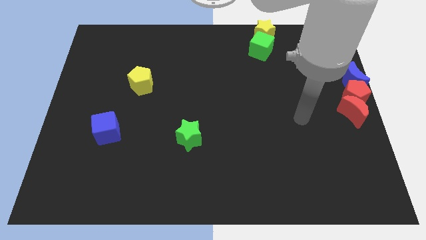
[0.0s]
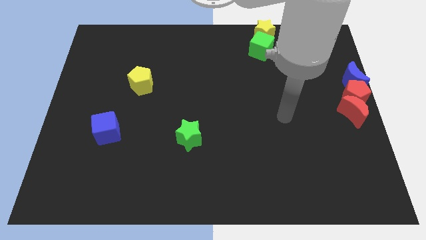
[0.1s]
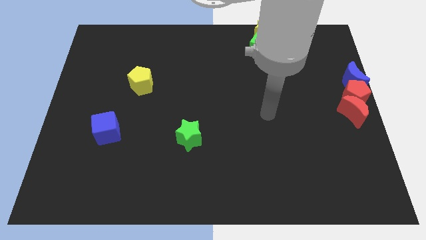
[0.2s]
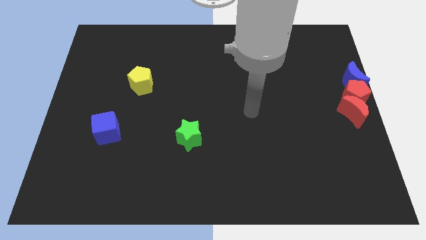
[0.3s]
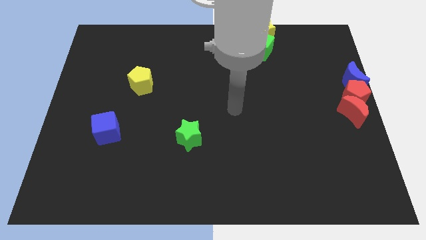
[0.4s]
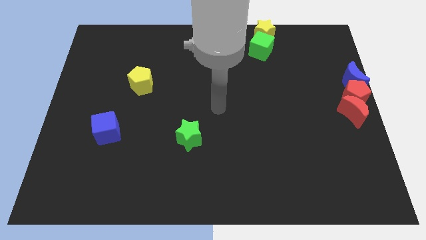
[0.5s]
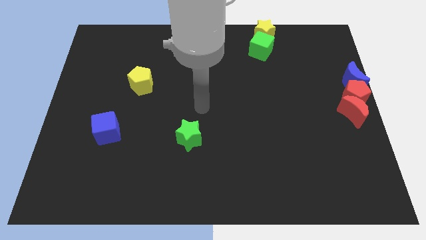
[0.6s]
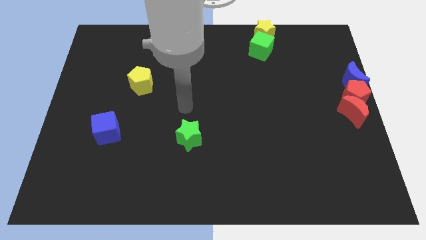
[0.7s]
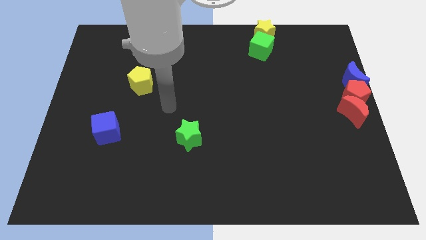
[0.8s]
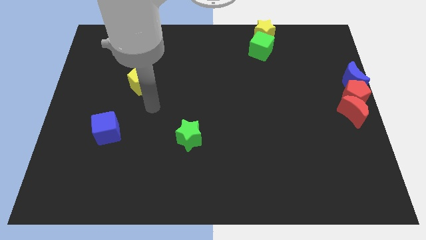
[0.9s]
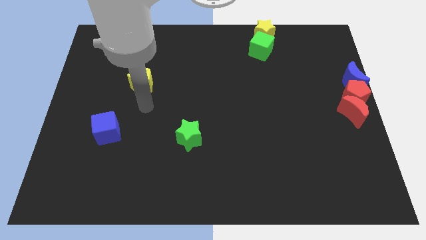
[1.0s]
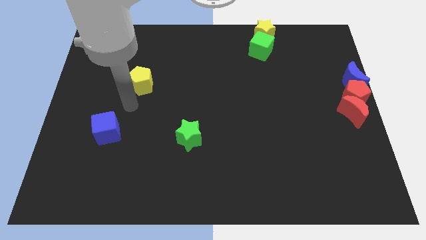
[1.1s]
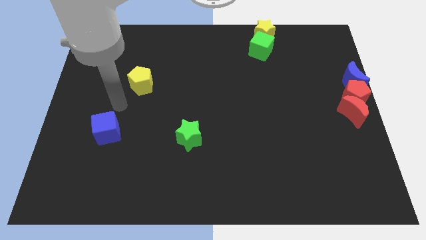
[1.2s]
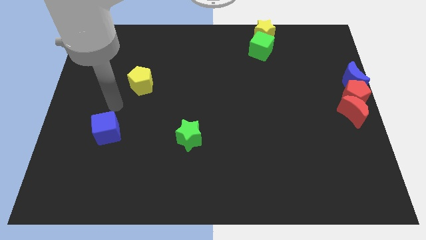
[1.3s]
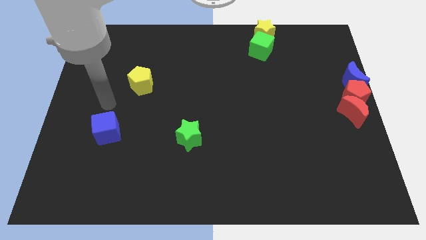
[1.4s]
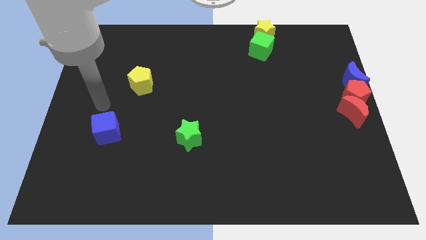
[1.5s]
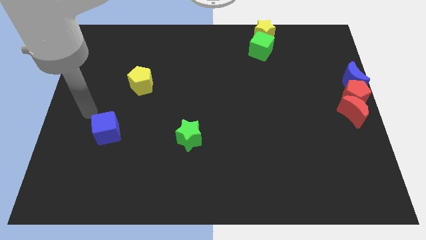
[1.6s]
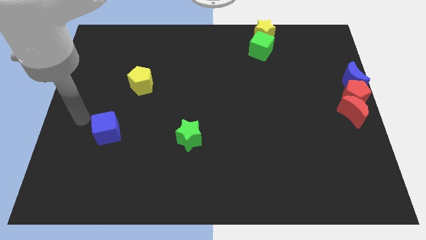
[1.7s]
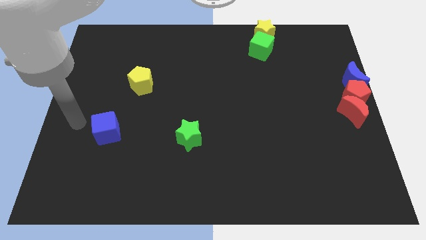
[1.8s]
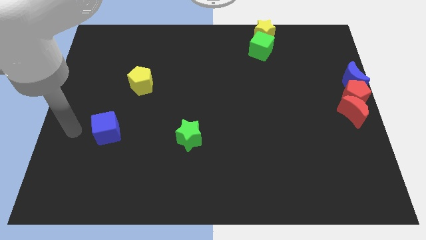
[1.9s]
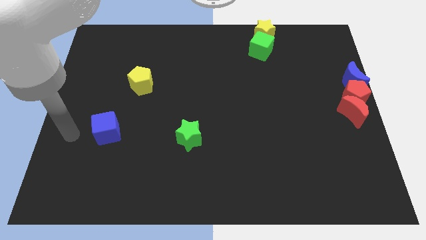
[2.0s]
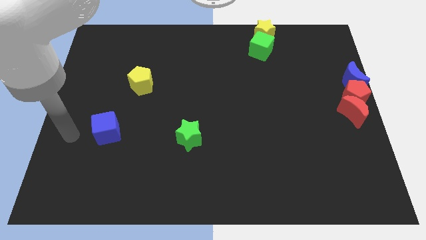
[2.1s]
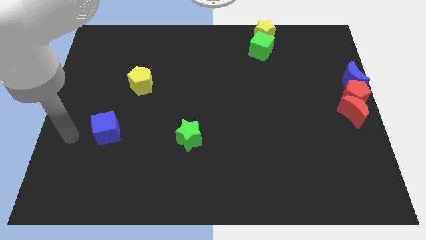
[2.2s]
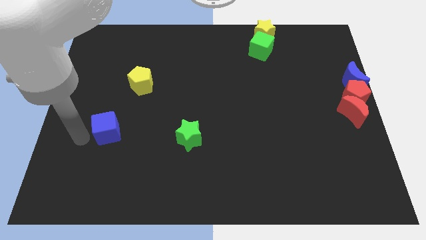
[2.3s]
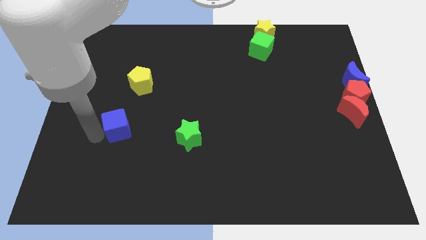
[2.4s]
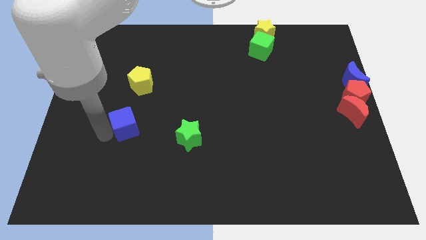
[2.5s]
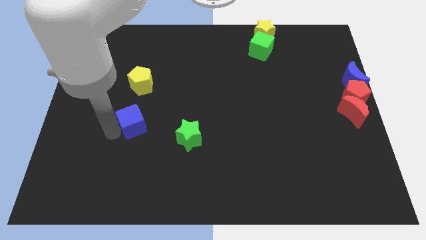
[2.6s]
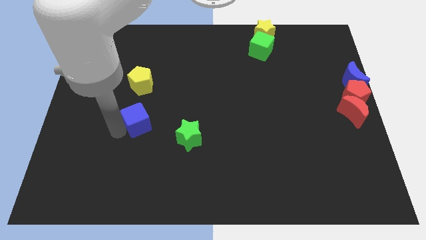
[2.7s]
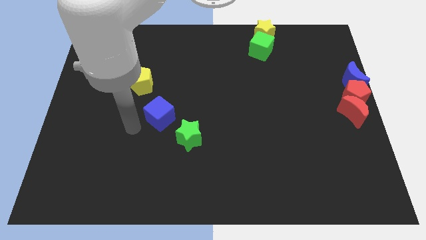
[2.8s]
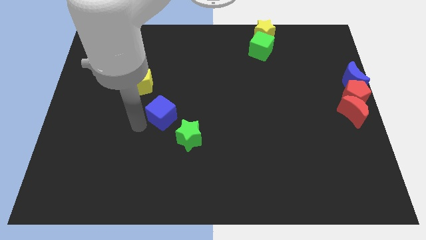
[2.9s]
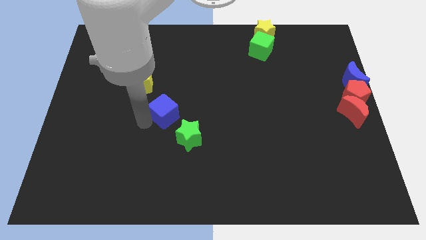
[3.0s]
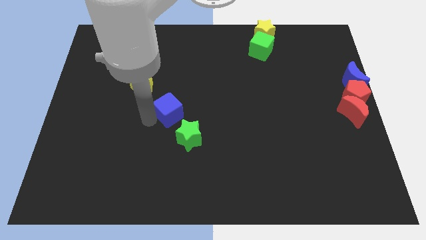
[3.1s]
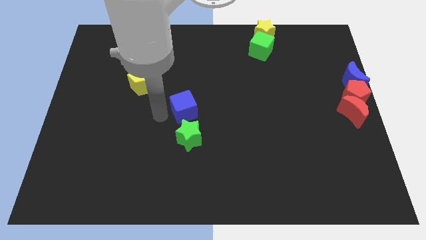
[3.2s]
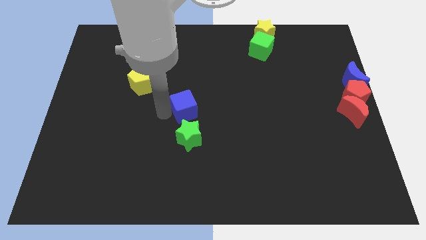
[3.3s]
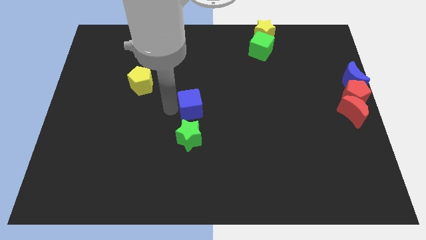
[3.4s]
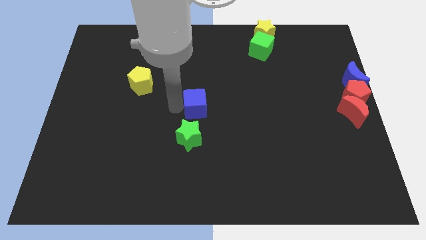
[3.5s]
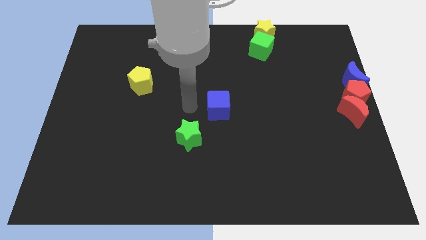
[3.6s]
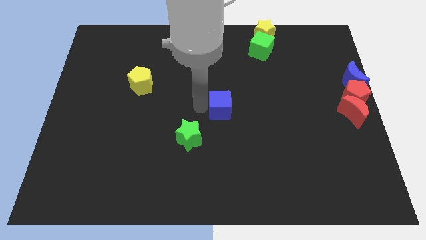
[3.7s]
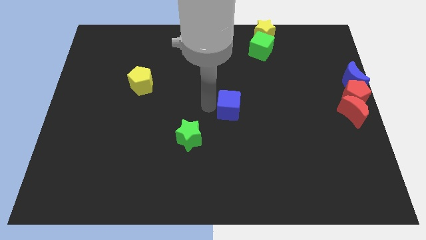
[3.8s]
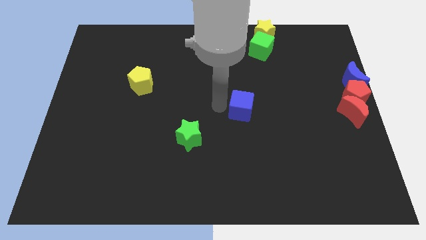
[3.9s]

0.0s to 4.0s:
place the blue cube at the center of the board

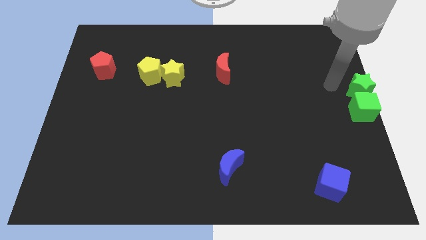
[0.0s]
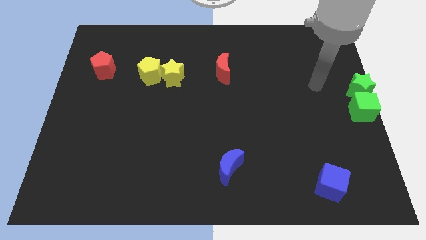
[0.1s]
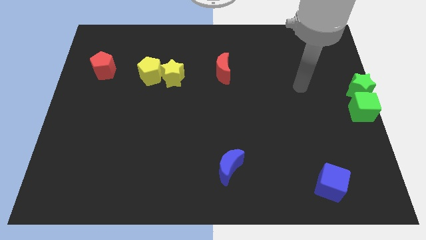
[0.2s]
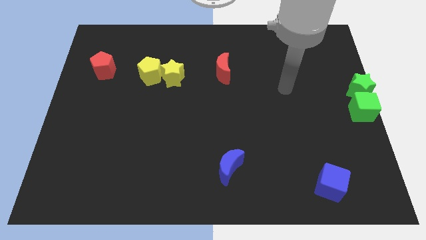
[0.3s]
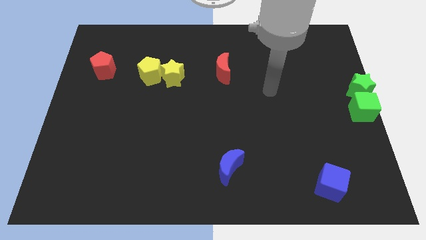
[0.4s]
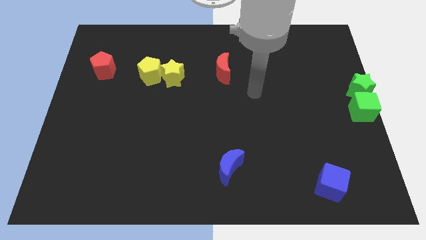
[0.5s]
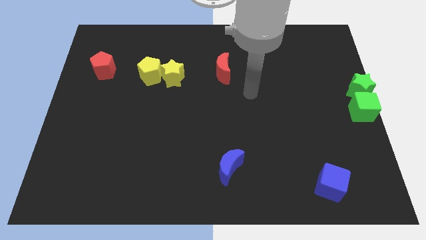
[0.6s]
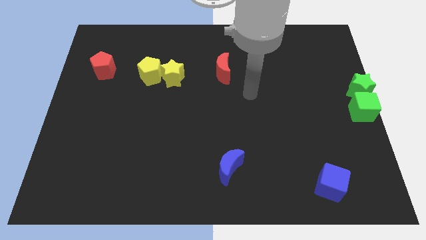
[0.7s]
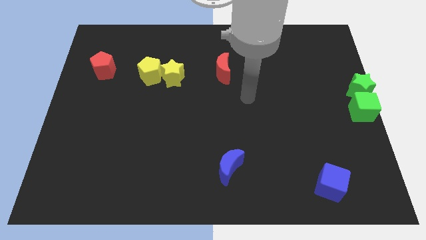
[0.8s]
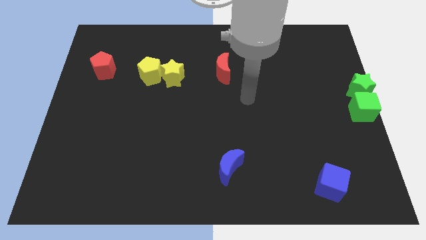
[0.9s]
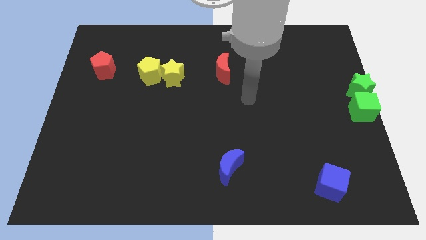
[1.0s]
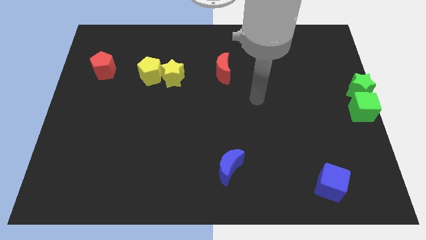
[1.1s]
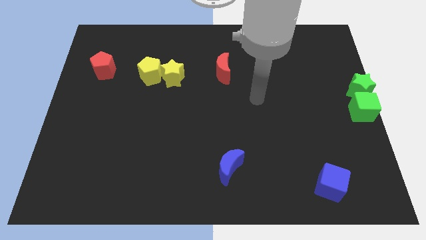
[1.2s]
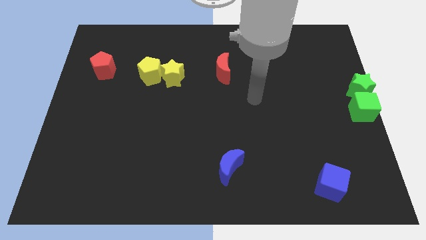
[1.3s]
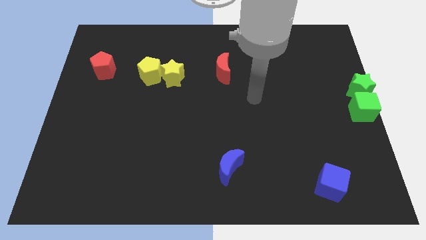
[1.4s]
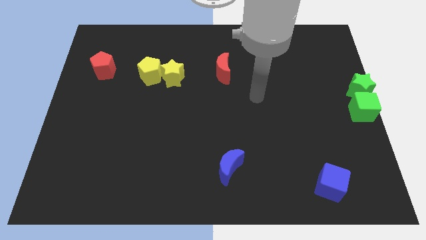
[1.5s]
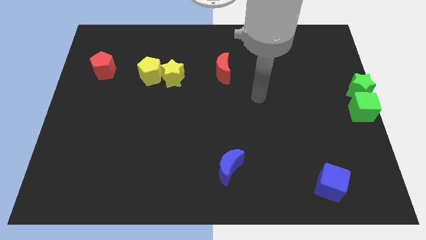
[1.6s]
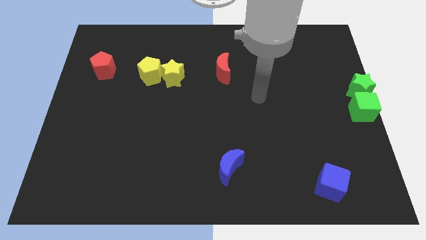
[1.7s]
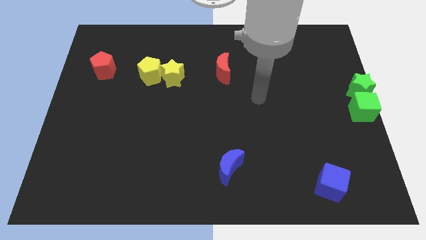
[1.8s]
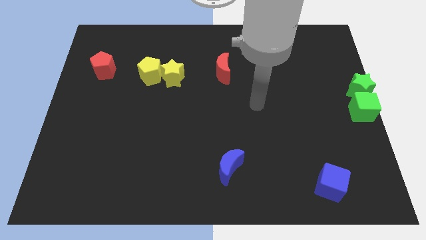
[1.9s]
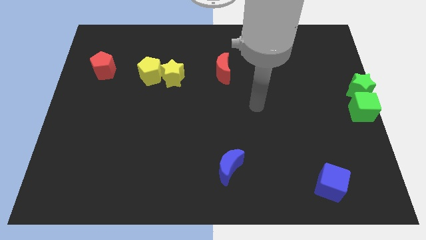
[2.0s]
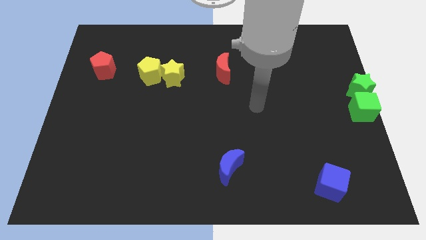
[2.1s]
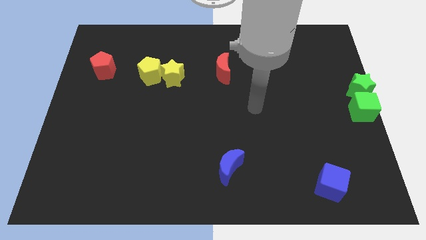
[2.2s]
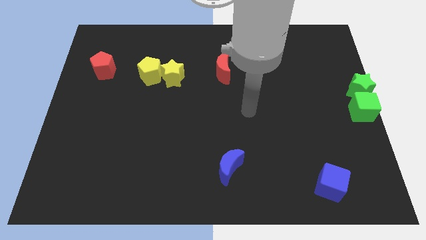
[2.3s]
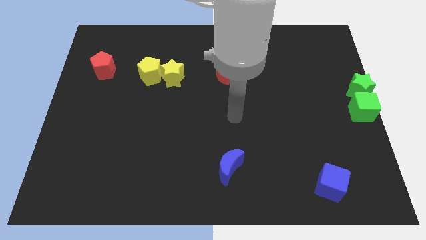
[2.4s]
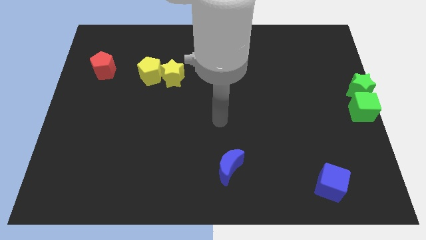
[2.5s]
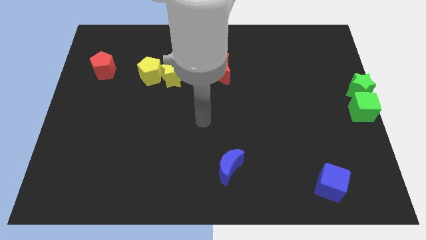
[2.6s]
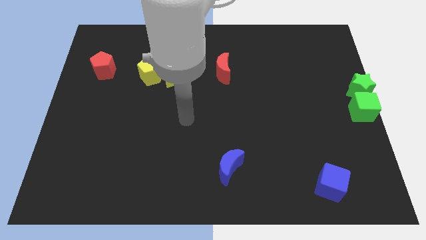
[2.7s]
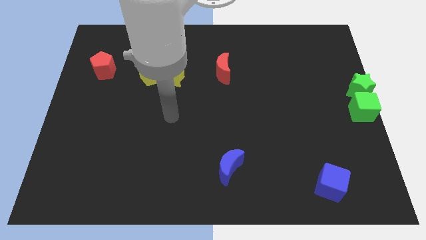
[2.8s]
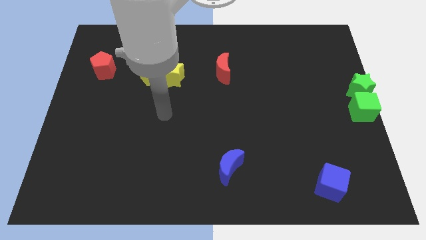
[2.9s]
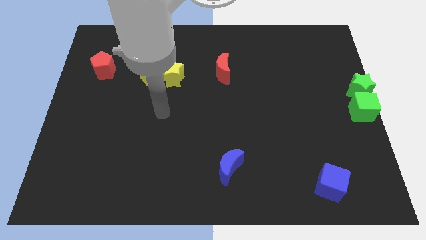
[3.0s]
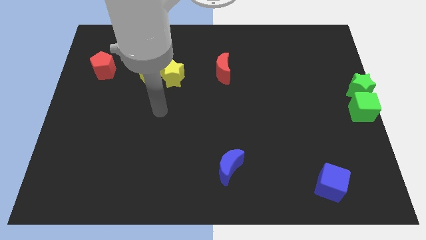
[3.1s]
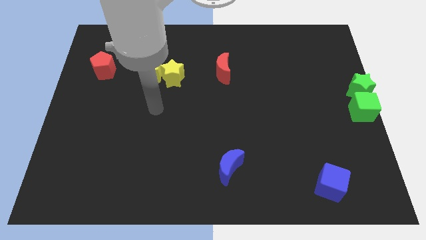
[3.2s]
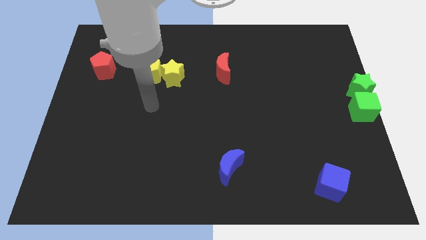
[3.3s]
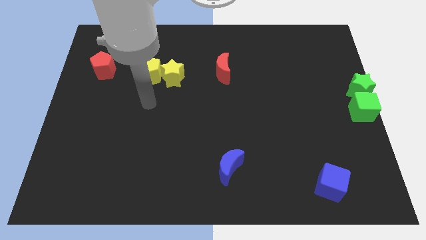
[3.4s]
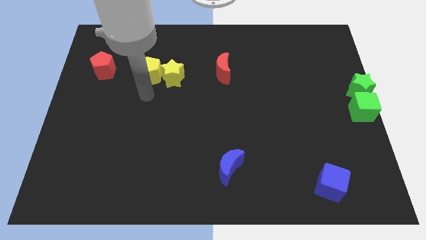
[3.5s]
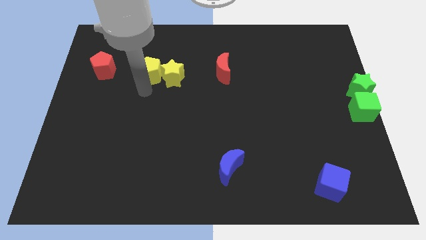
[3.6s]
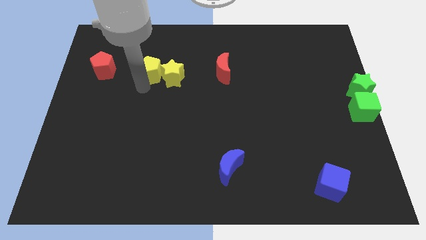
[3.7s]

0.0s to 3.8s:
move your arm towards the yellow pentagon

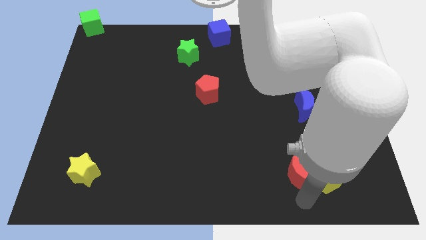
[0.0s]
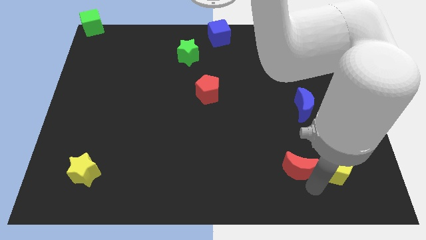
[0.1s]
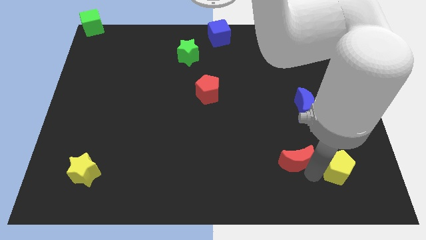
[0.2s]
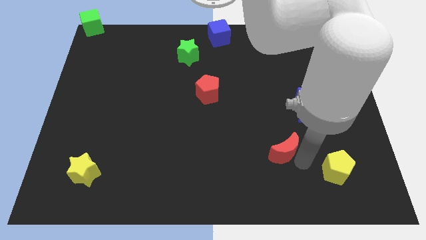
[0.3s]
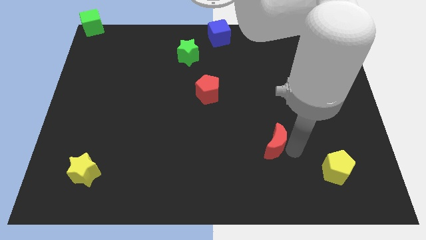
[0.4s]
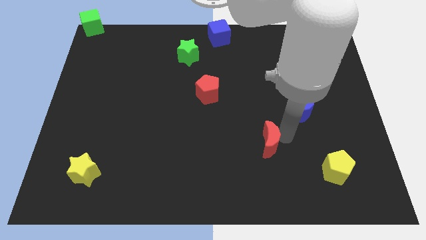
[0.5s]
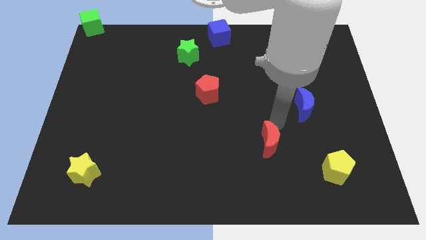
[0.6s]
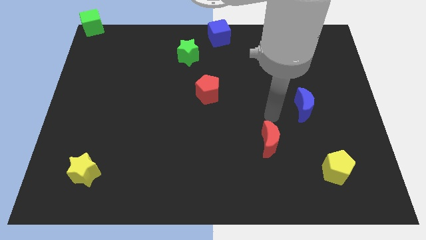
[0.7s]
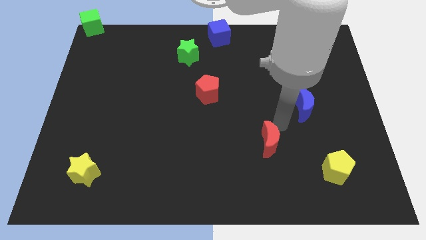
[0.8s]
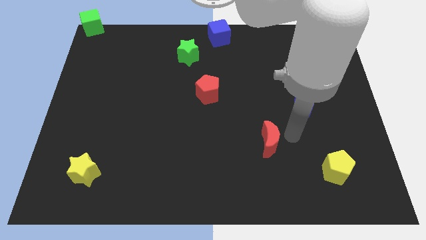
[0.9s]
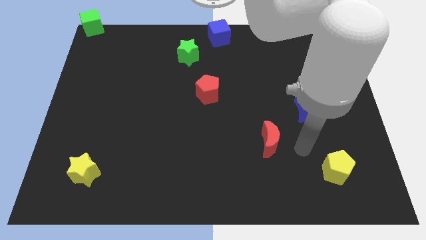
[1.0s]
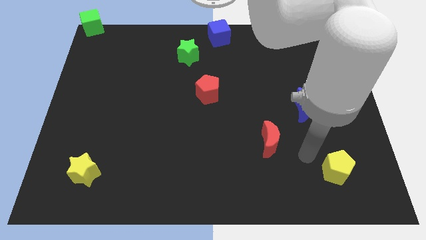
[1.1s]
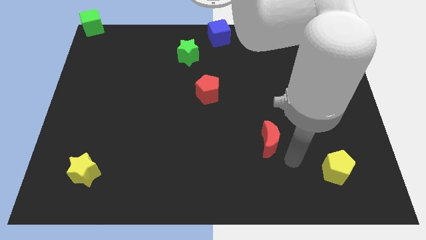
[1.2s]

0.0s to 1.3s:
separate the red crescent from the yellow pentagon
